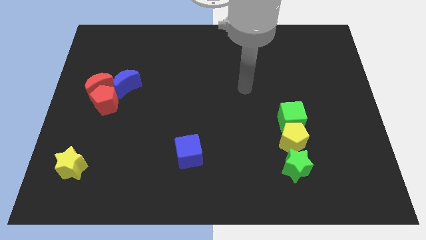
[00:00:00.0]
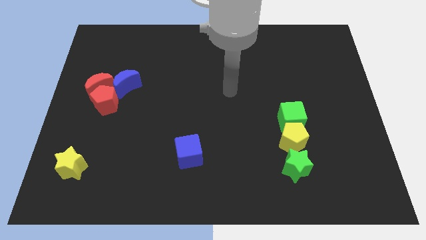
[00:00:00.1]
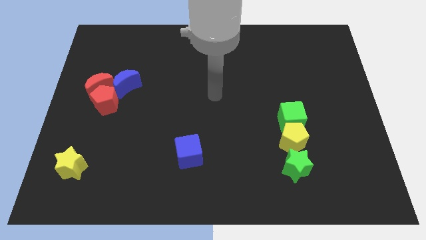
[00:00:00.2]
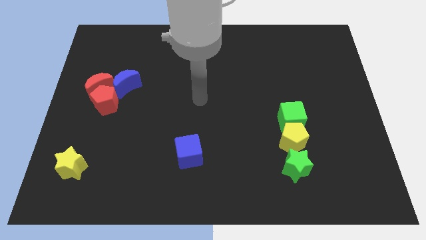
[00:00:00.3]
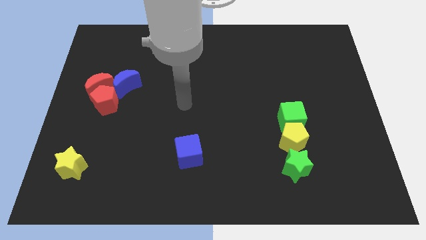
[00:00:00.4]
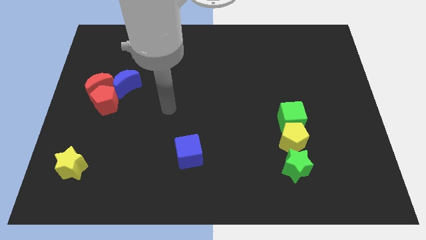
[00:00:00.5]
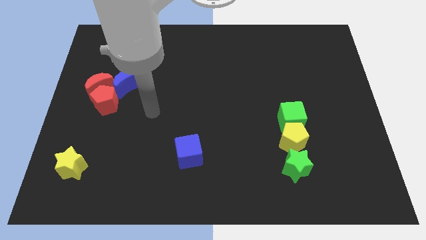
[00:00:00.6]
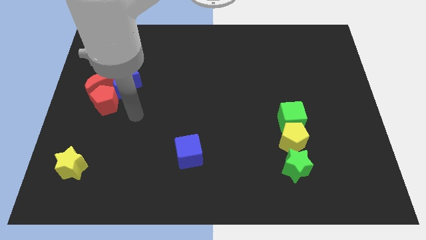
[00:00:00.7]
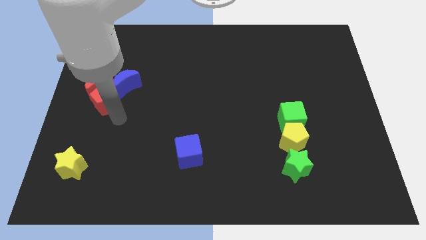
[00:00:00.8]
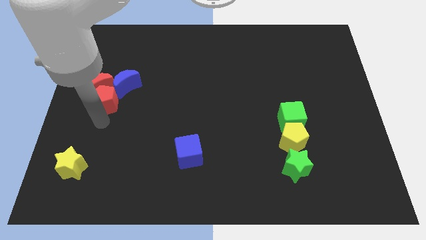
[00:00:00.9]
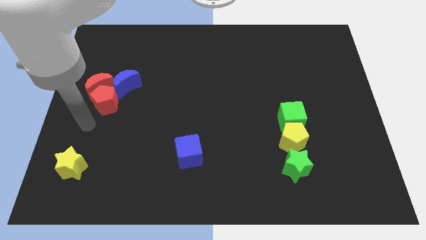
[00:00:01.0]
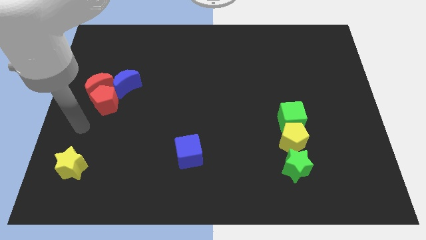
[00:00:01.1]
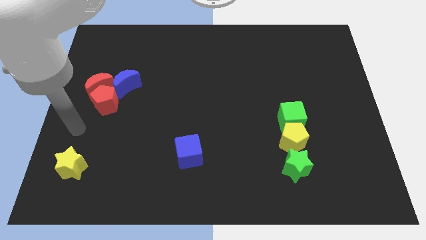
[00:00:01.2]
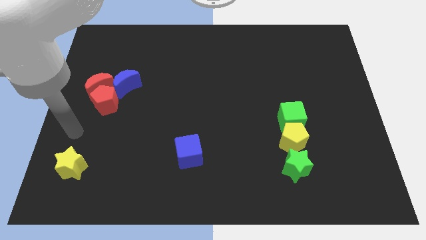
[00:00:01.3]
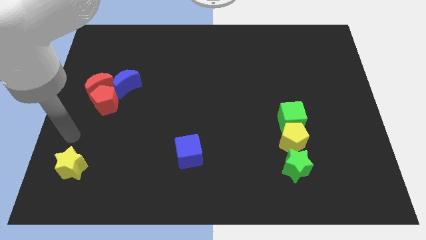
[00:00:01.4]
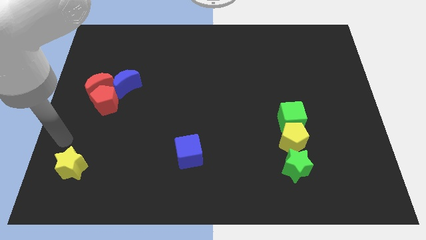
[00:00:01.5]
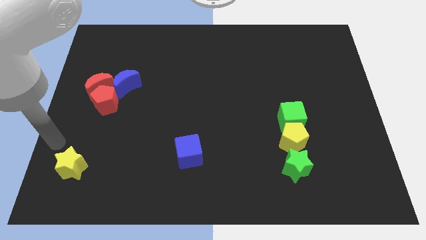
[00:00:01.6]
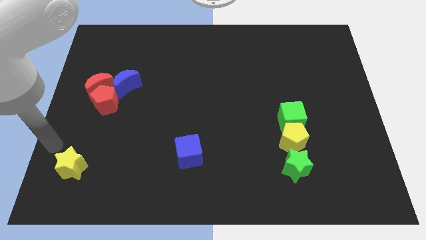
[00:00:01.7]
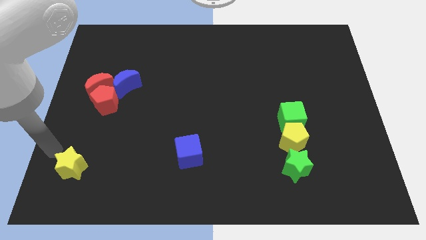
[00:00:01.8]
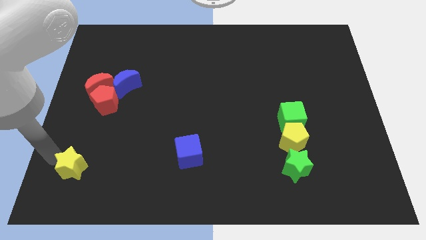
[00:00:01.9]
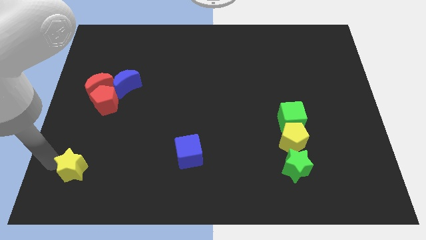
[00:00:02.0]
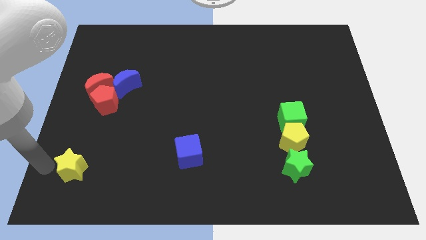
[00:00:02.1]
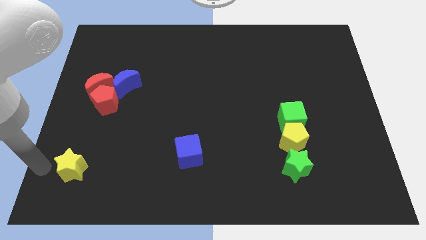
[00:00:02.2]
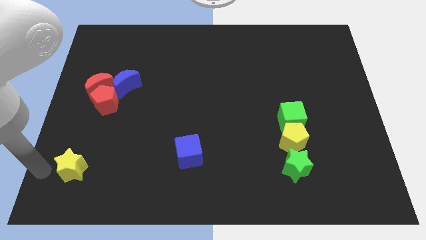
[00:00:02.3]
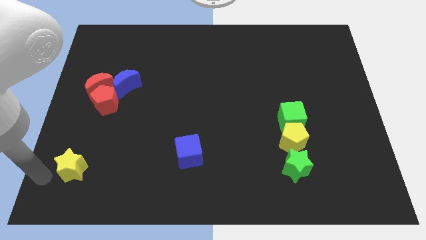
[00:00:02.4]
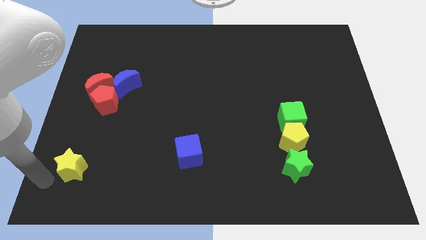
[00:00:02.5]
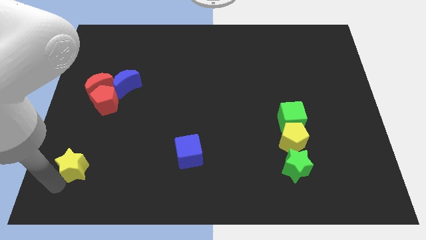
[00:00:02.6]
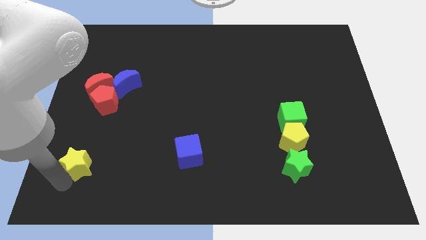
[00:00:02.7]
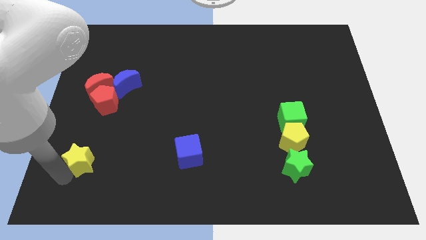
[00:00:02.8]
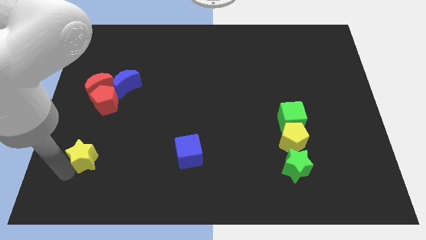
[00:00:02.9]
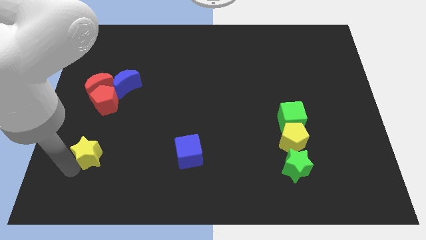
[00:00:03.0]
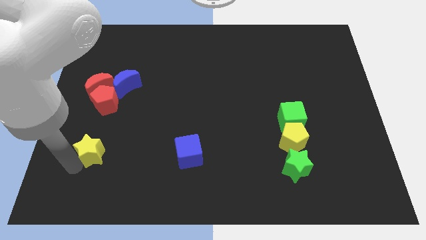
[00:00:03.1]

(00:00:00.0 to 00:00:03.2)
push the yellow star slightly up

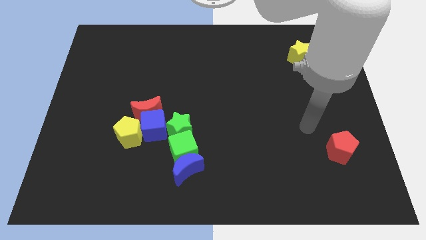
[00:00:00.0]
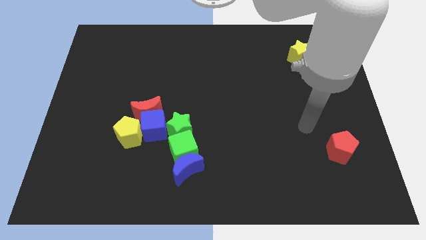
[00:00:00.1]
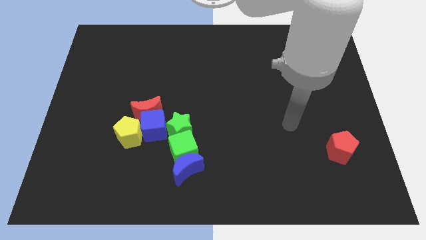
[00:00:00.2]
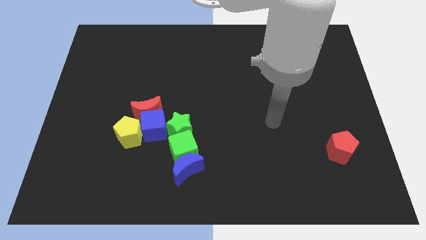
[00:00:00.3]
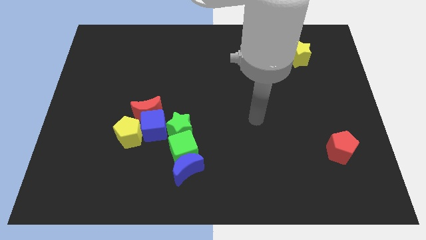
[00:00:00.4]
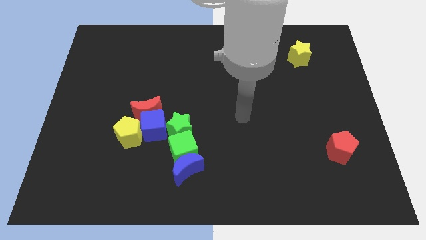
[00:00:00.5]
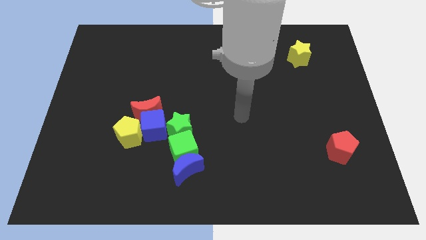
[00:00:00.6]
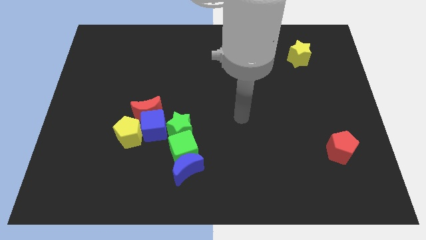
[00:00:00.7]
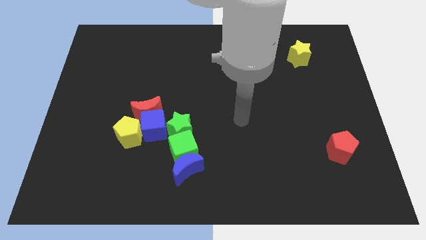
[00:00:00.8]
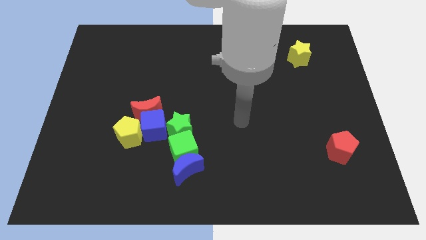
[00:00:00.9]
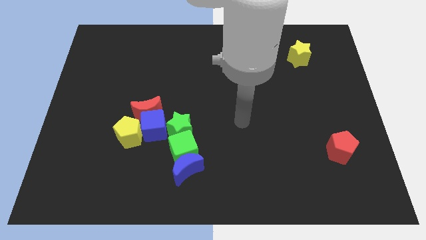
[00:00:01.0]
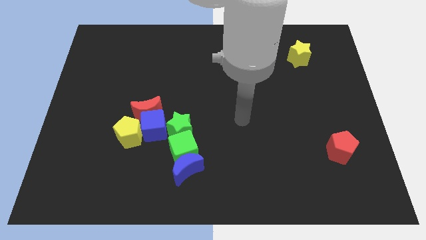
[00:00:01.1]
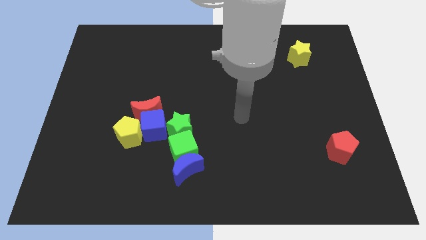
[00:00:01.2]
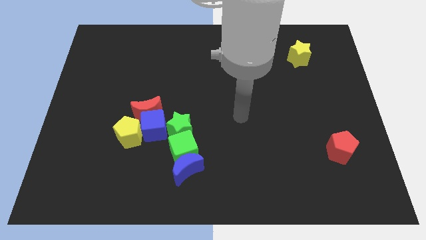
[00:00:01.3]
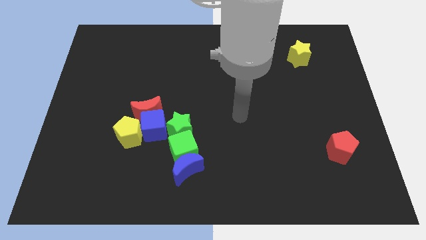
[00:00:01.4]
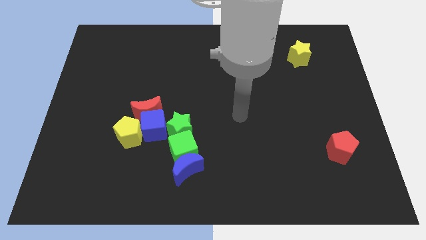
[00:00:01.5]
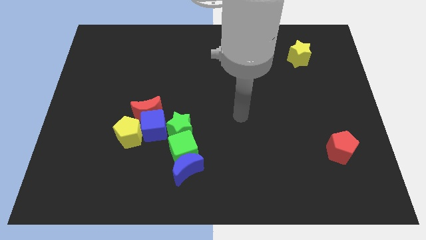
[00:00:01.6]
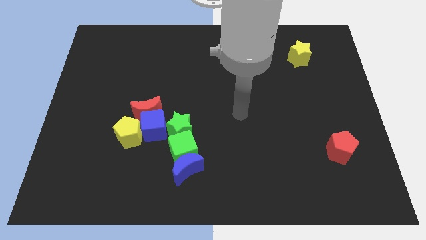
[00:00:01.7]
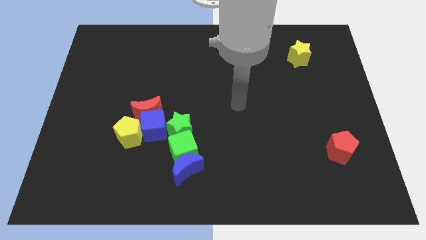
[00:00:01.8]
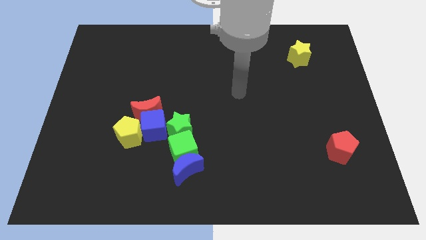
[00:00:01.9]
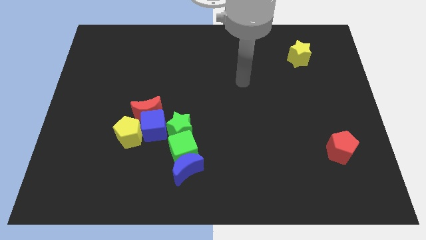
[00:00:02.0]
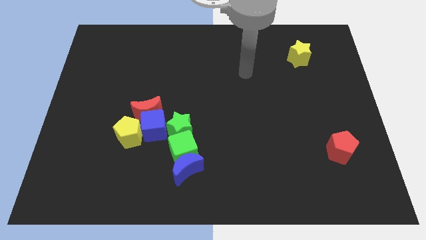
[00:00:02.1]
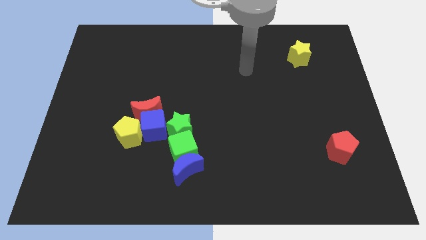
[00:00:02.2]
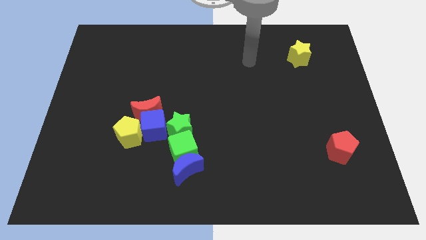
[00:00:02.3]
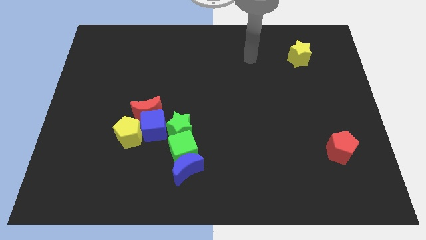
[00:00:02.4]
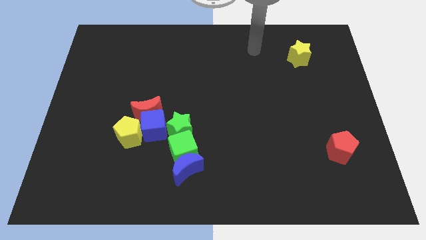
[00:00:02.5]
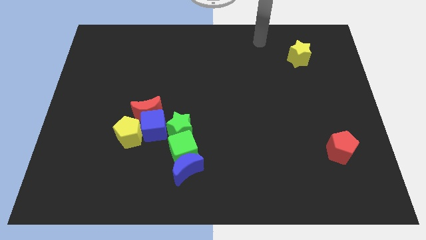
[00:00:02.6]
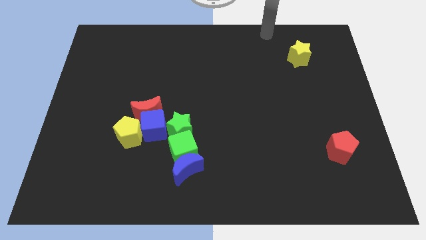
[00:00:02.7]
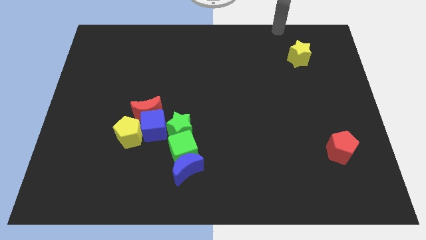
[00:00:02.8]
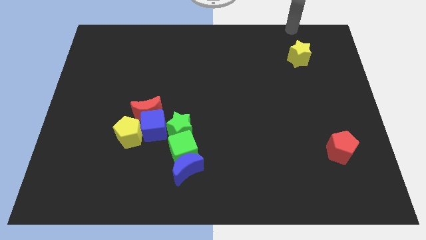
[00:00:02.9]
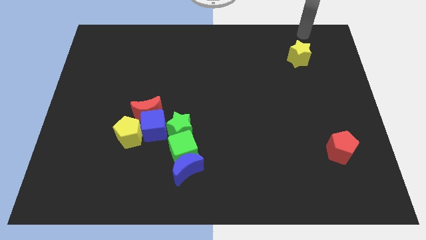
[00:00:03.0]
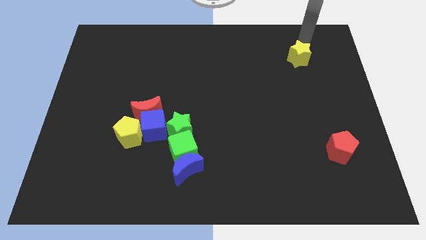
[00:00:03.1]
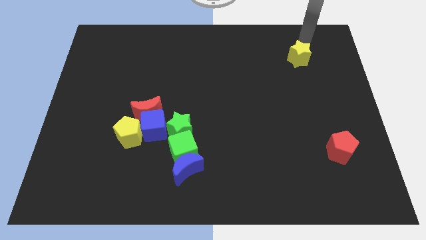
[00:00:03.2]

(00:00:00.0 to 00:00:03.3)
point the arm above the yellow star

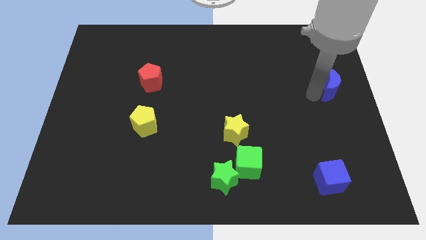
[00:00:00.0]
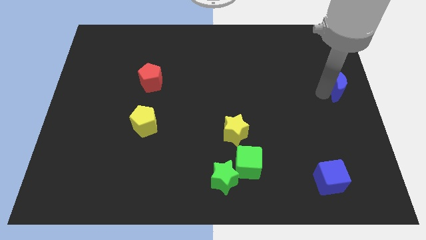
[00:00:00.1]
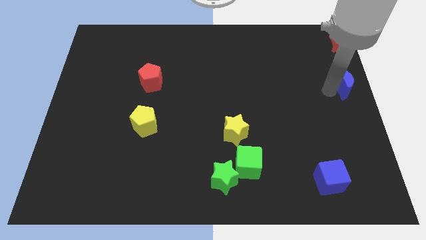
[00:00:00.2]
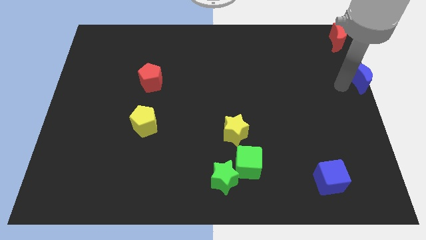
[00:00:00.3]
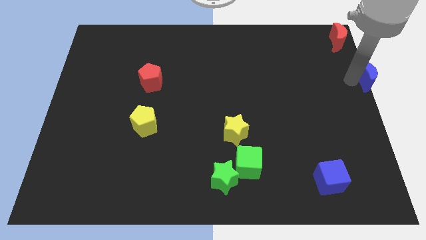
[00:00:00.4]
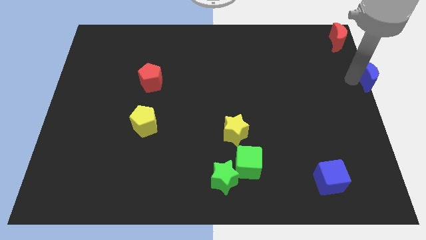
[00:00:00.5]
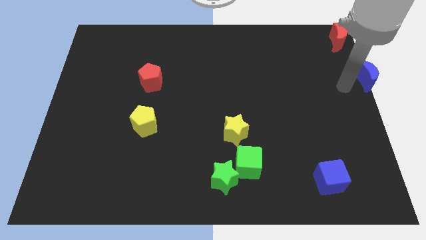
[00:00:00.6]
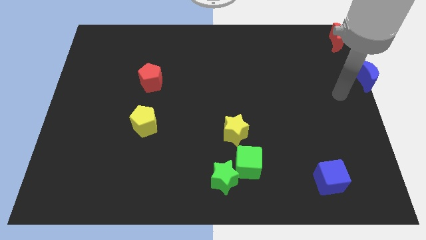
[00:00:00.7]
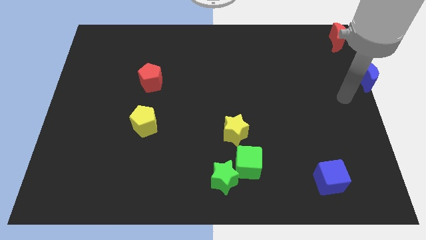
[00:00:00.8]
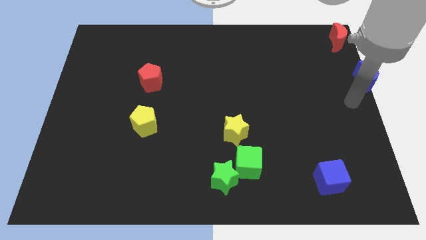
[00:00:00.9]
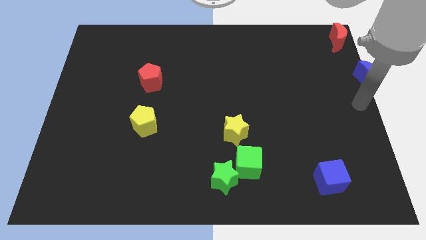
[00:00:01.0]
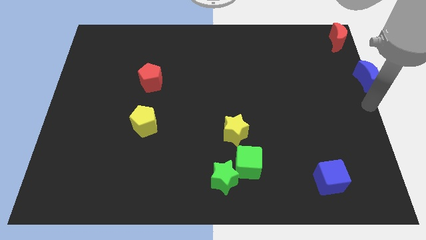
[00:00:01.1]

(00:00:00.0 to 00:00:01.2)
push blue moon to the right side of the board

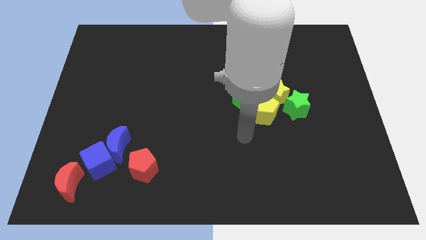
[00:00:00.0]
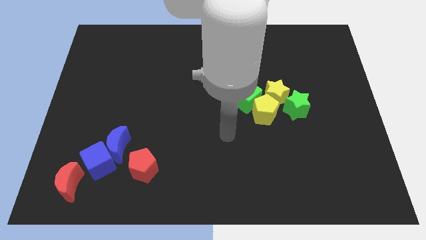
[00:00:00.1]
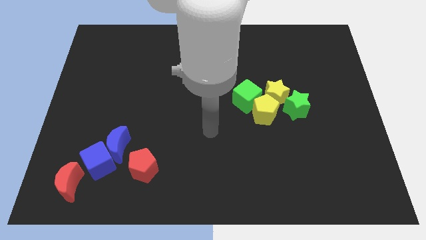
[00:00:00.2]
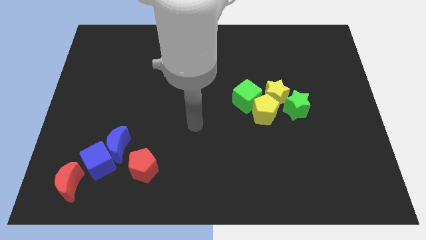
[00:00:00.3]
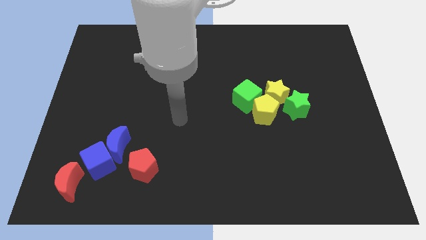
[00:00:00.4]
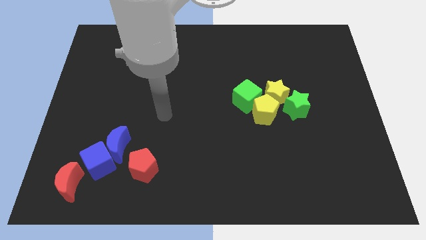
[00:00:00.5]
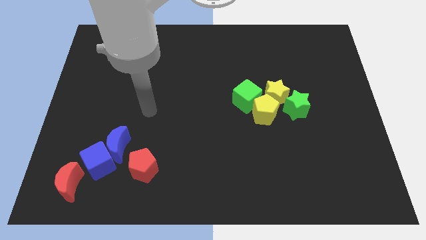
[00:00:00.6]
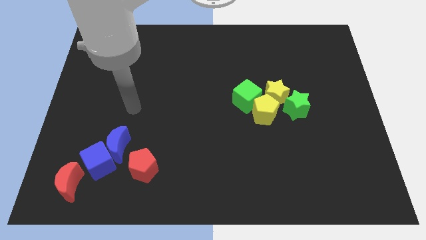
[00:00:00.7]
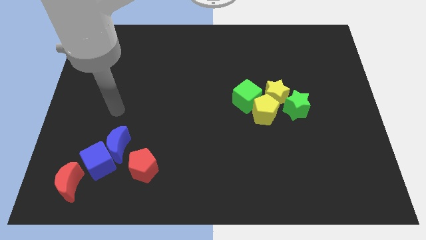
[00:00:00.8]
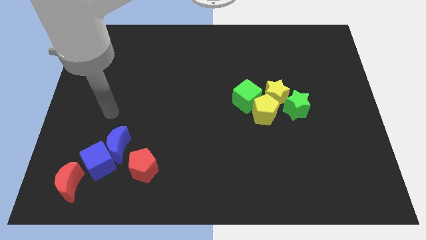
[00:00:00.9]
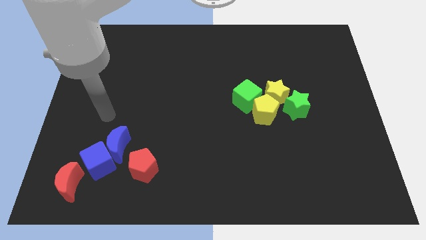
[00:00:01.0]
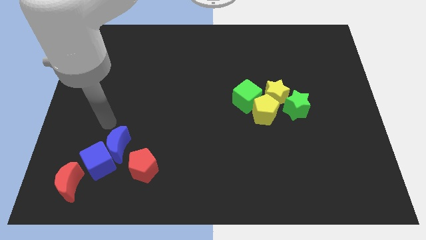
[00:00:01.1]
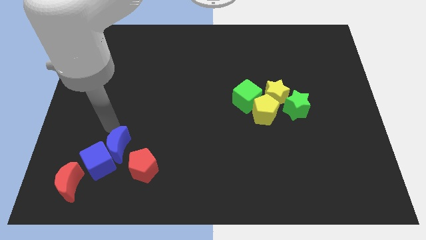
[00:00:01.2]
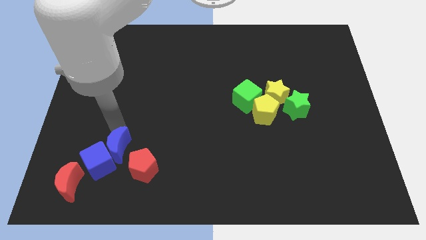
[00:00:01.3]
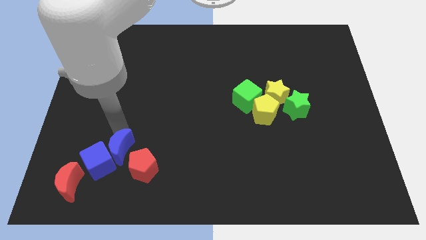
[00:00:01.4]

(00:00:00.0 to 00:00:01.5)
point your arm at the top side of the blue crescent
